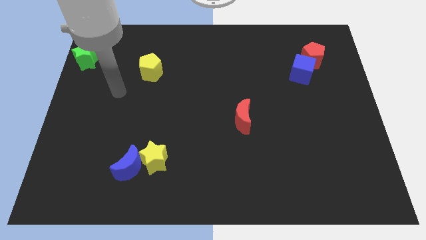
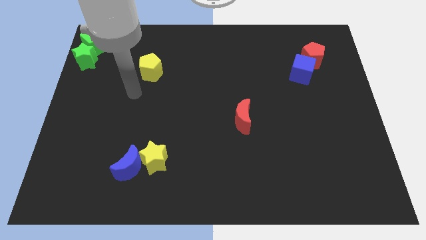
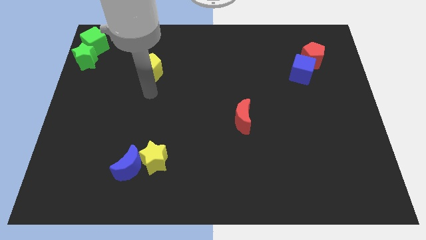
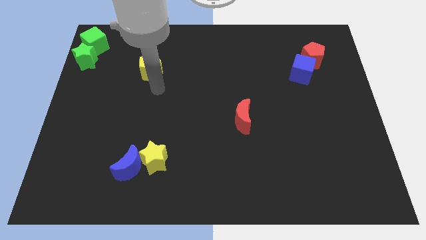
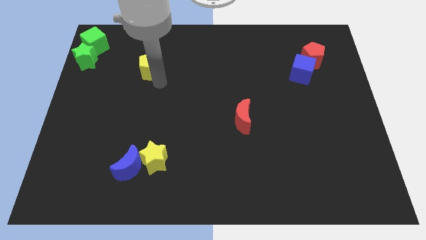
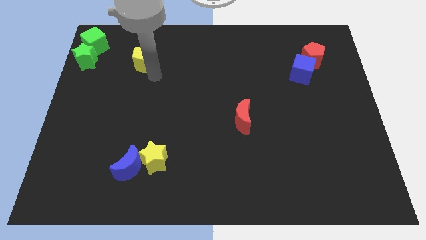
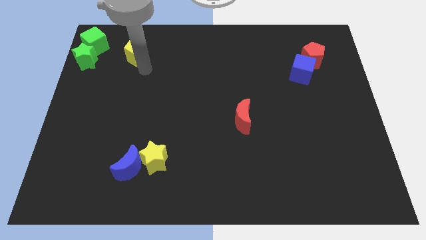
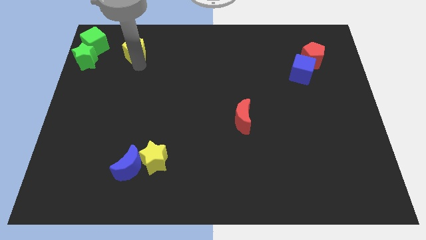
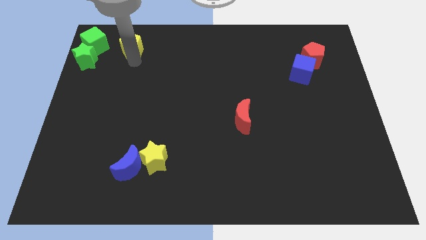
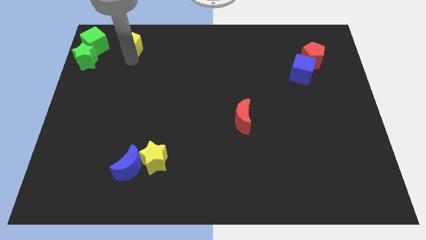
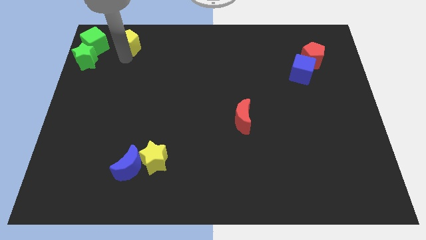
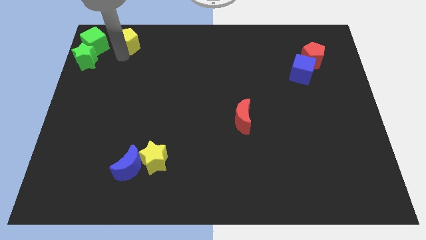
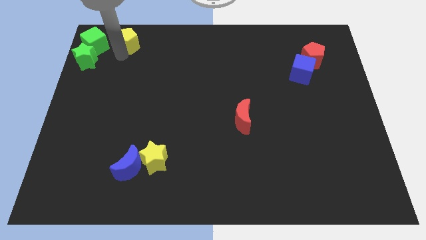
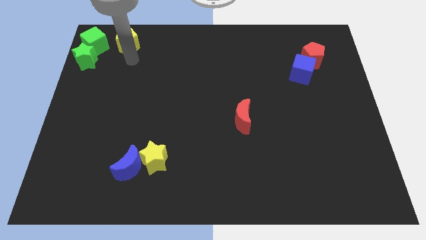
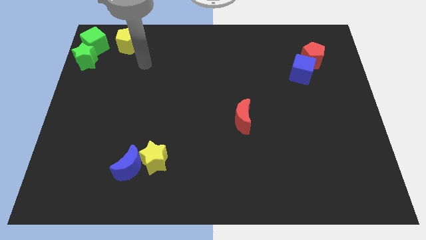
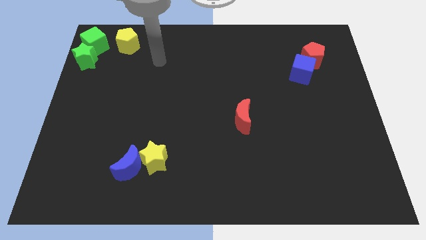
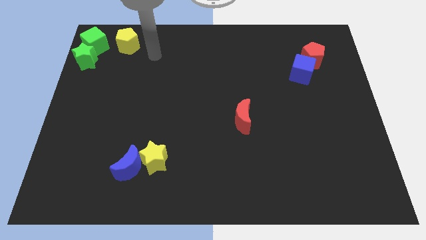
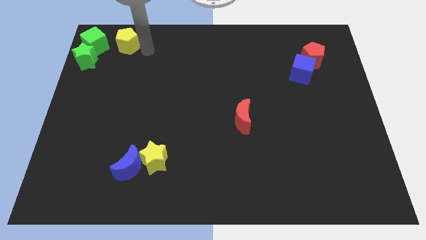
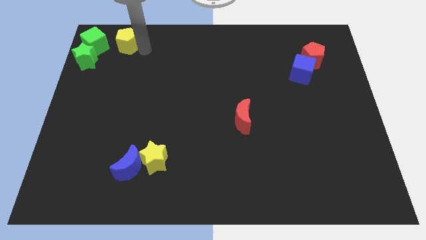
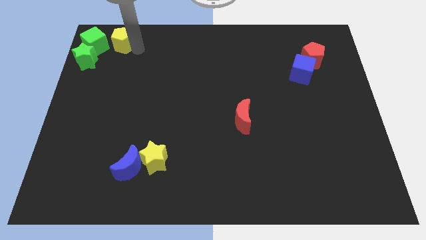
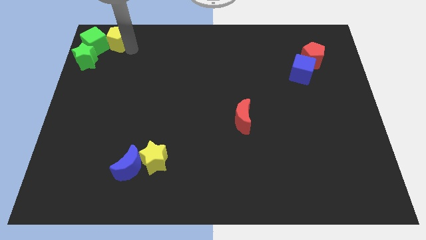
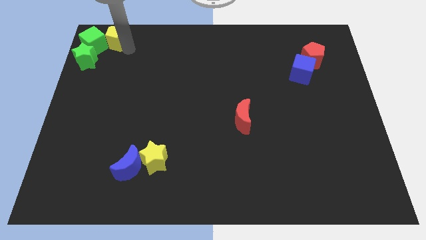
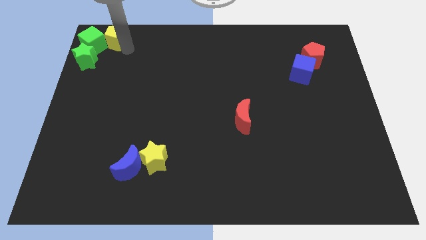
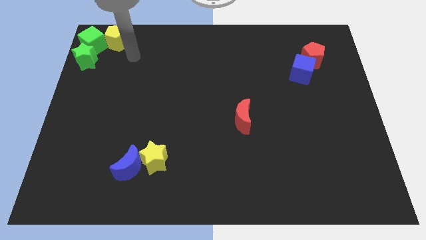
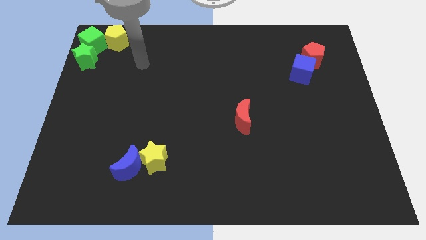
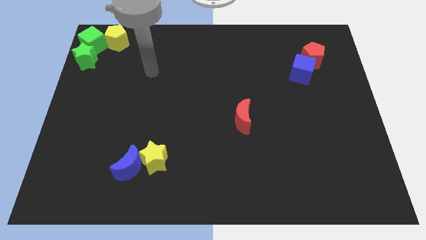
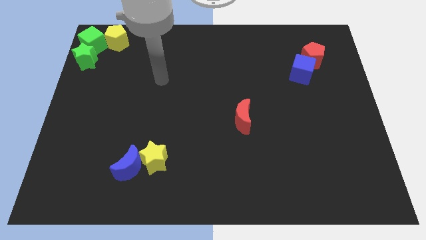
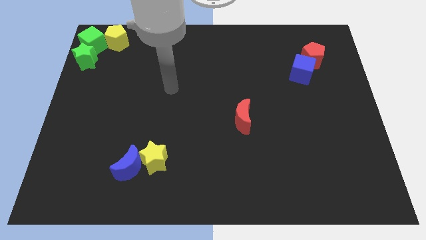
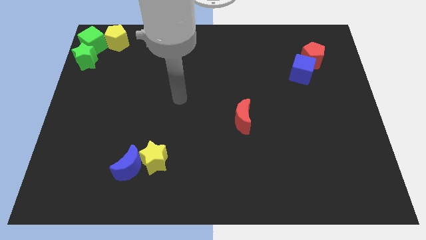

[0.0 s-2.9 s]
move the yellow pentagon into the green cube

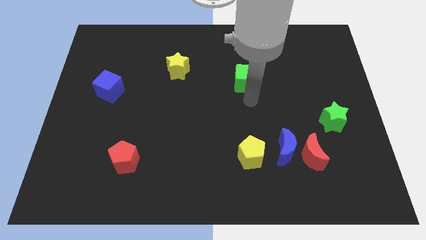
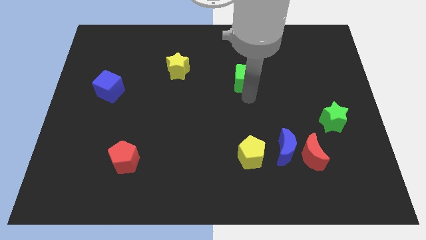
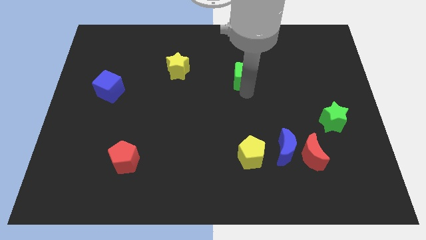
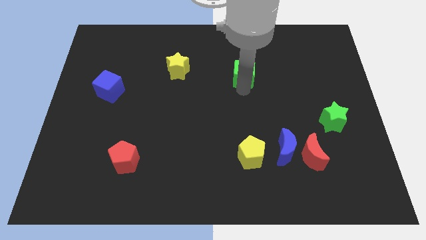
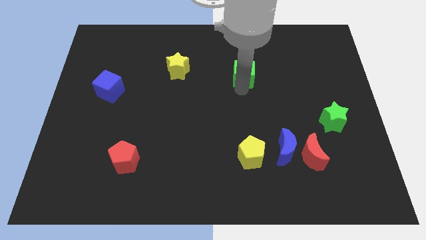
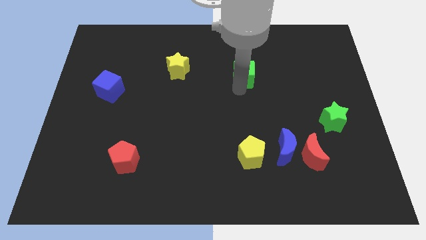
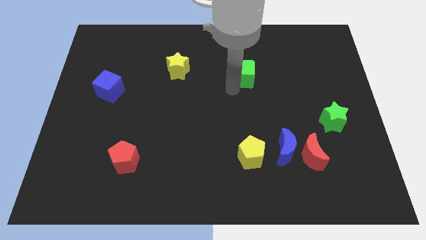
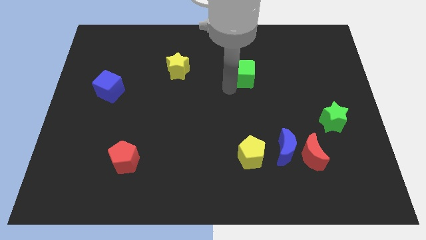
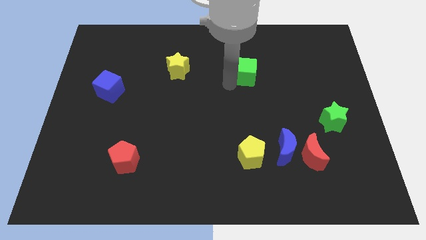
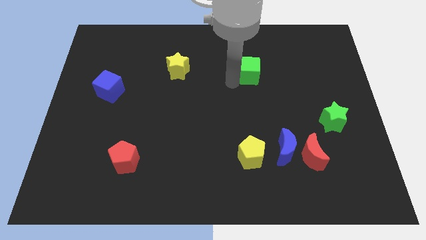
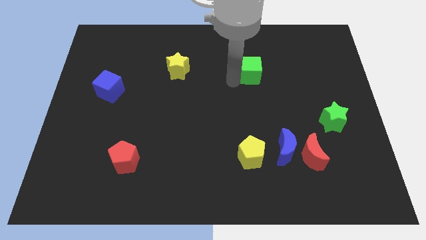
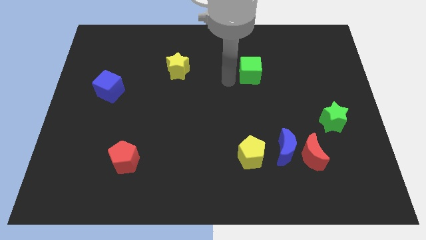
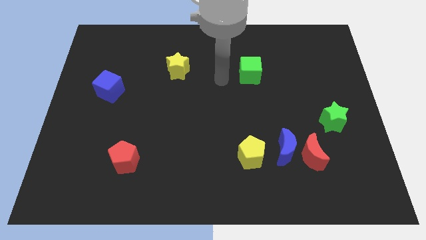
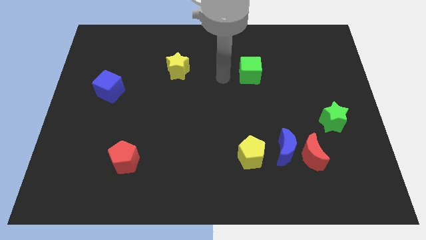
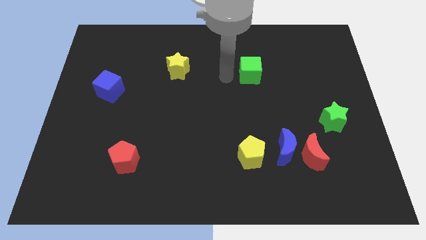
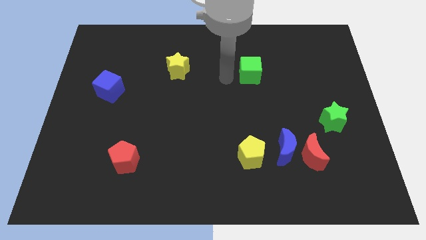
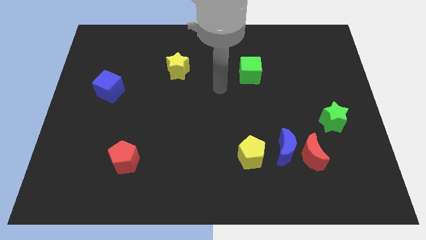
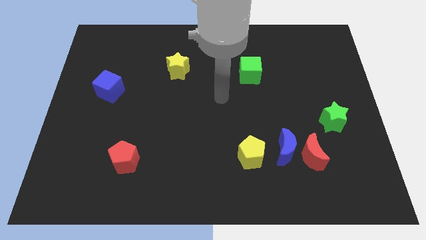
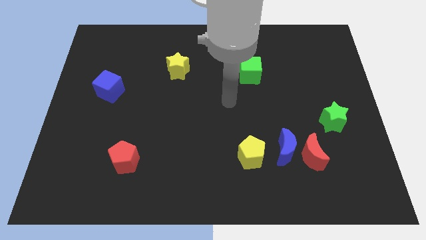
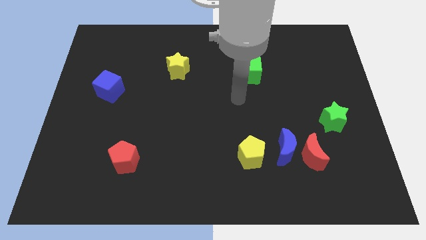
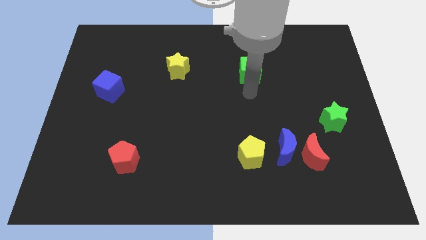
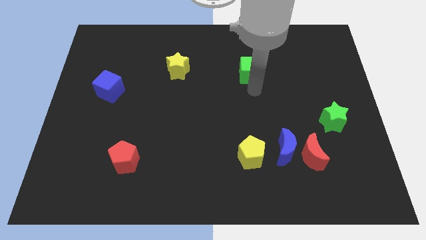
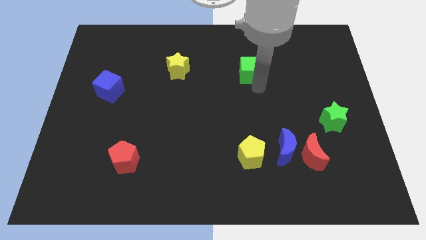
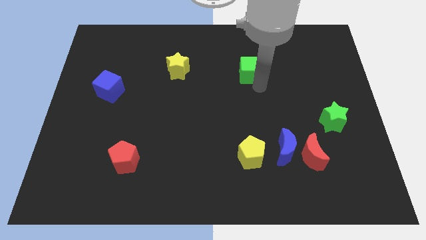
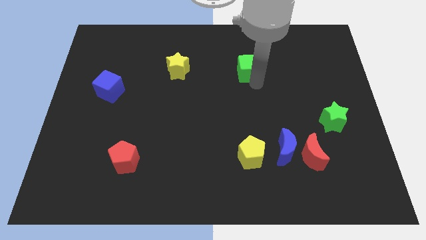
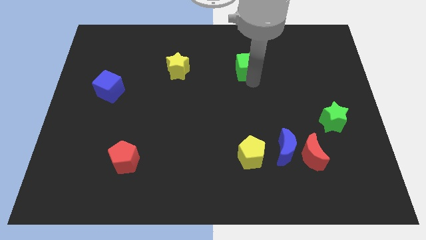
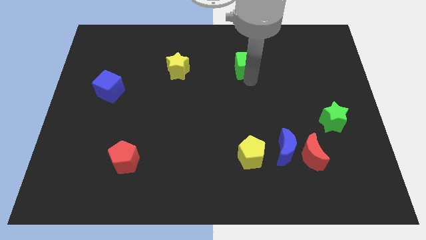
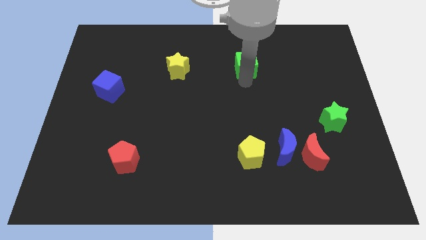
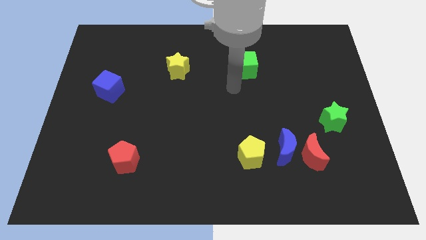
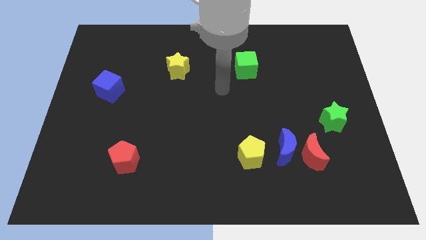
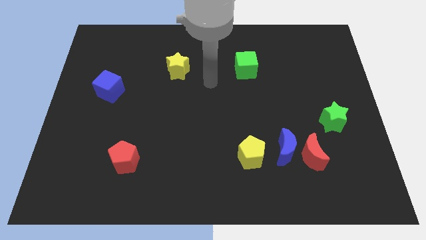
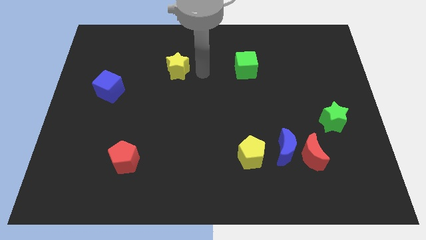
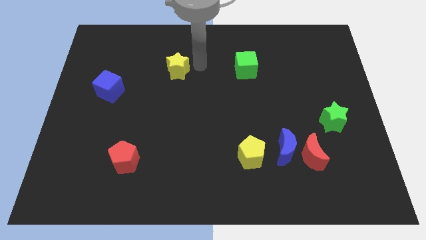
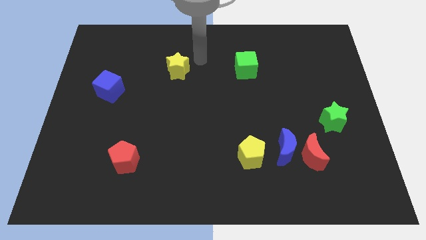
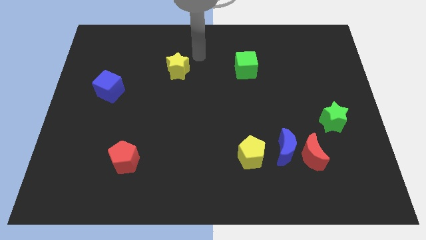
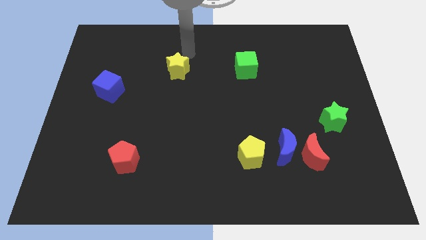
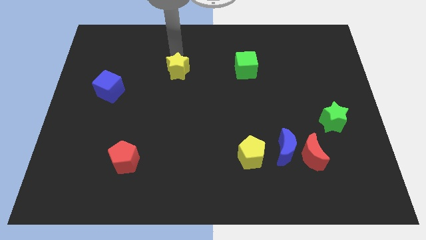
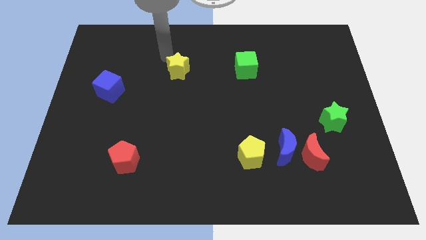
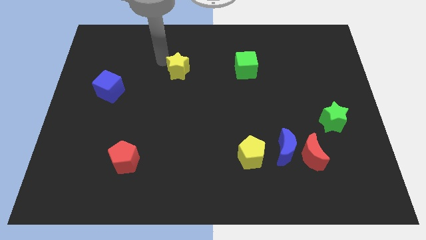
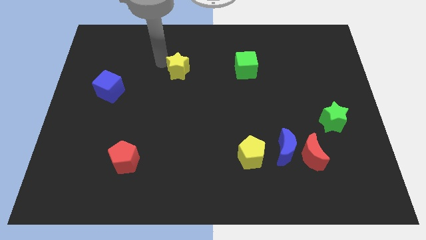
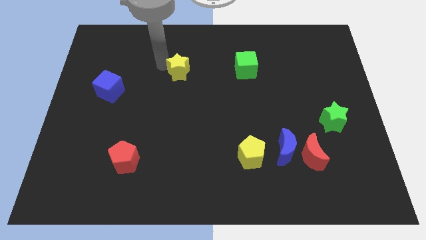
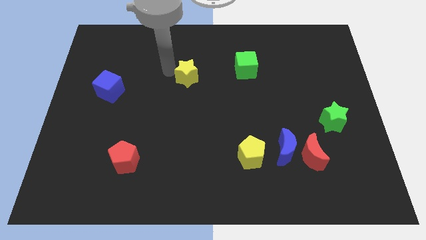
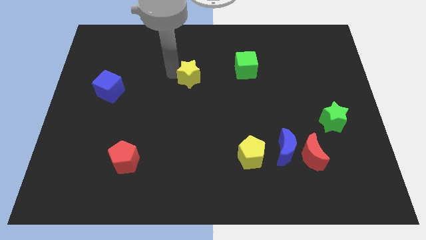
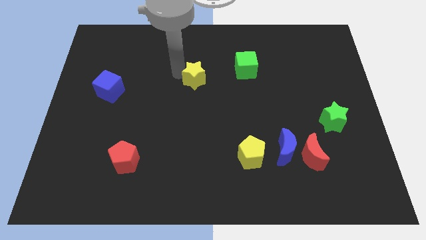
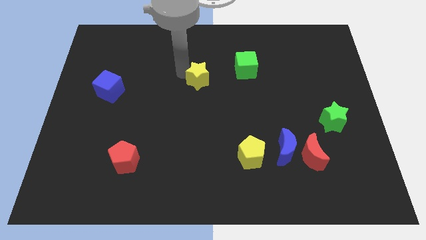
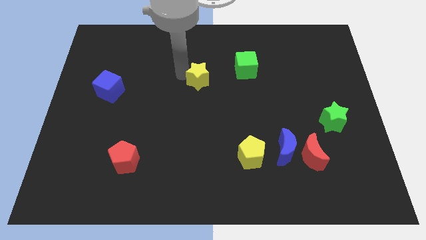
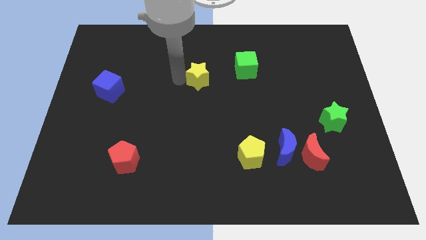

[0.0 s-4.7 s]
move your arm away from the green cube

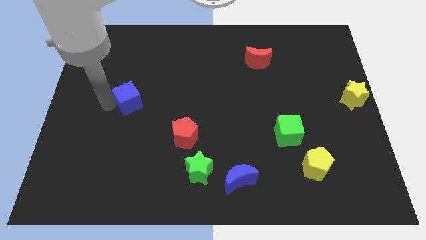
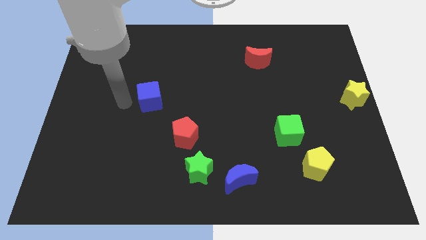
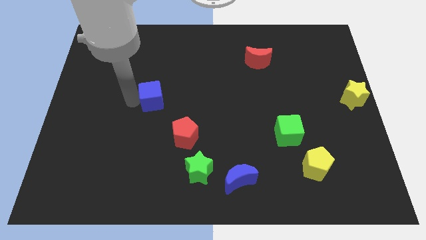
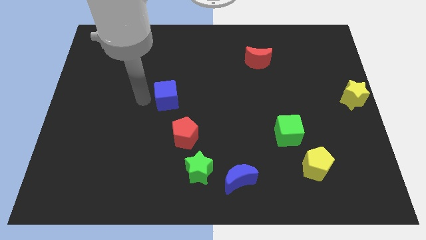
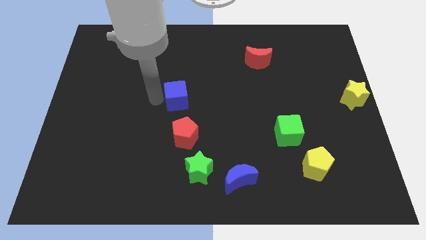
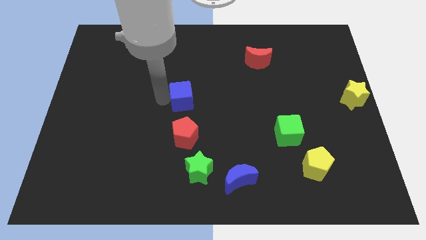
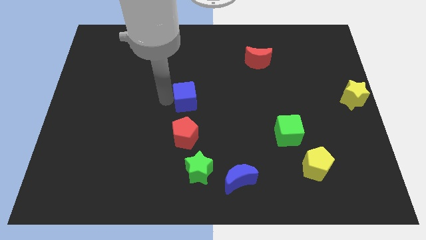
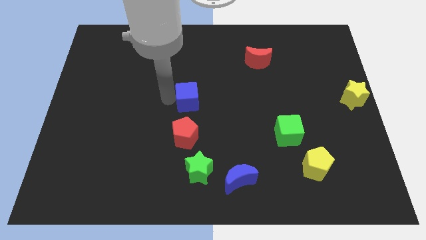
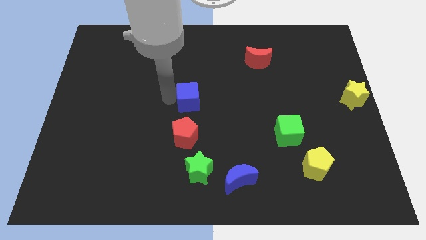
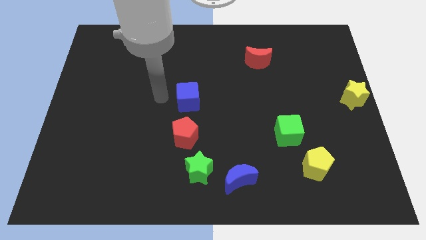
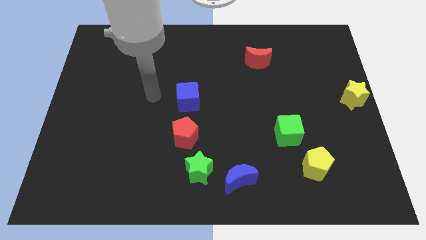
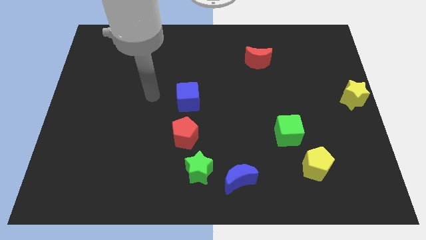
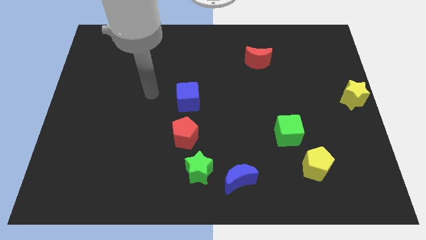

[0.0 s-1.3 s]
push the blue cube to the right of the board
